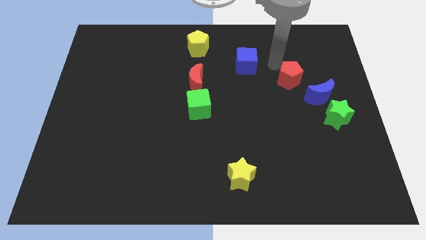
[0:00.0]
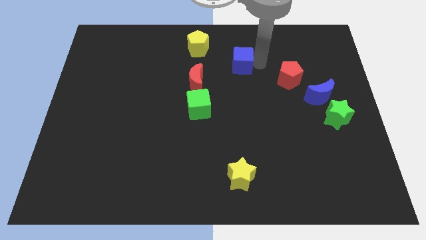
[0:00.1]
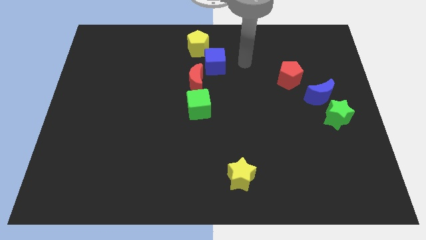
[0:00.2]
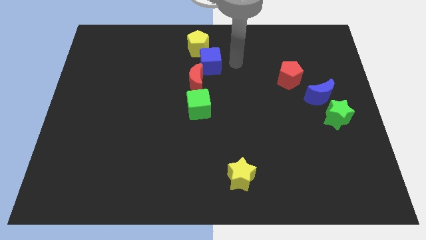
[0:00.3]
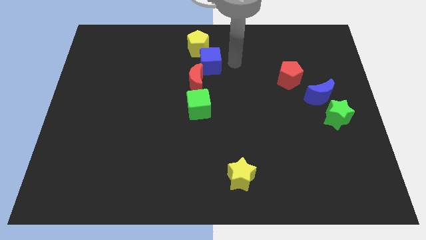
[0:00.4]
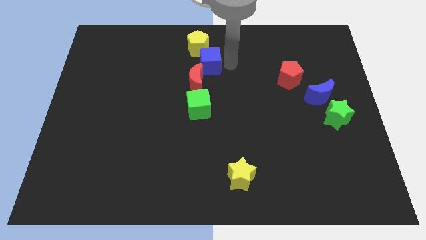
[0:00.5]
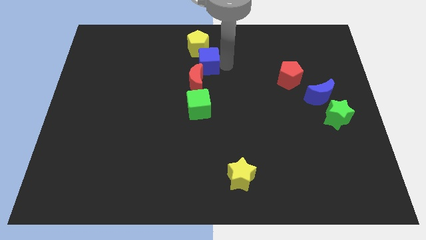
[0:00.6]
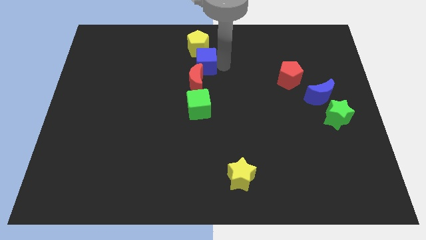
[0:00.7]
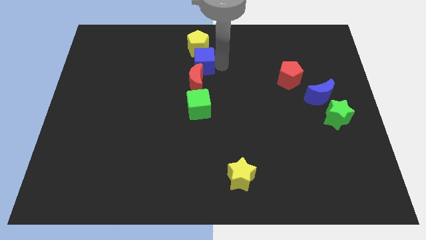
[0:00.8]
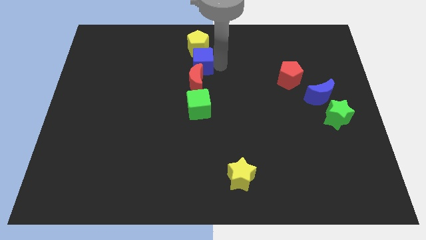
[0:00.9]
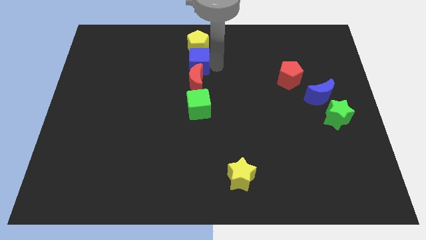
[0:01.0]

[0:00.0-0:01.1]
place the blue cube below the yellow pentagon

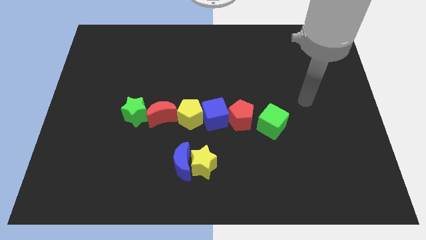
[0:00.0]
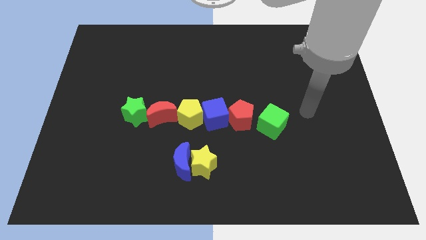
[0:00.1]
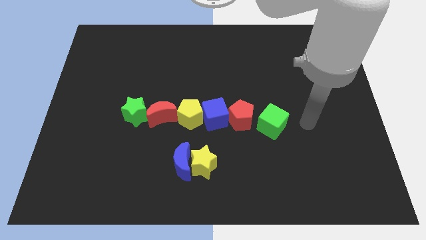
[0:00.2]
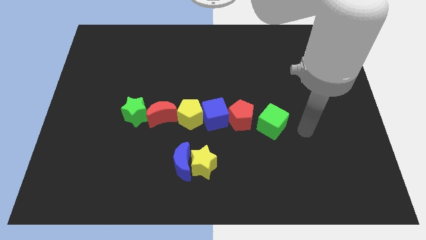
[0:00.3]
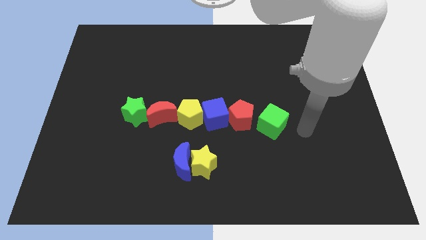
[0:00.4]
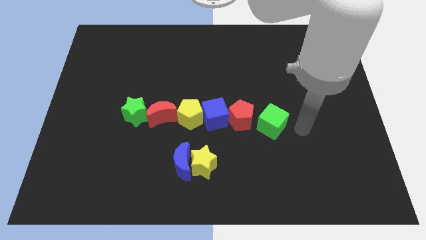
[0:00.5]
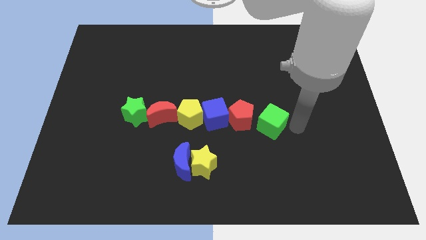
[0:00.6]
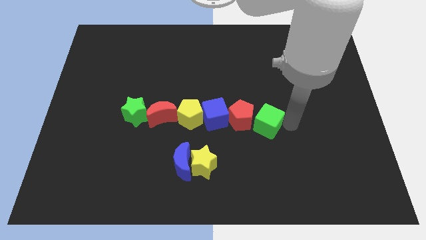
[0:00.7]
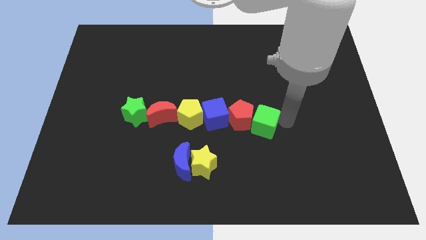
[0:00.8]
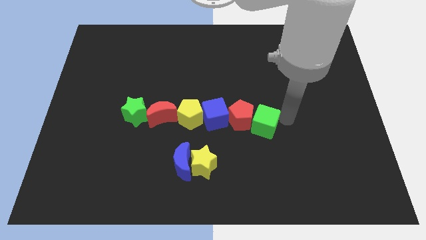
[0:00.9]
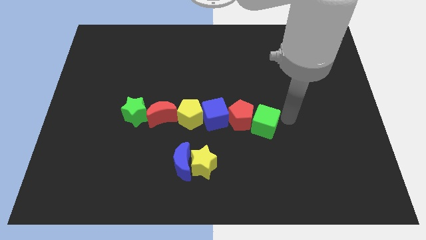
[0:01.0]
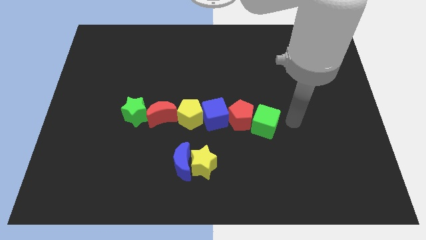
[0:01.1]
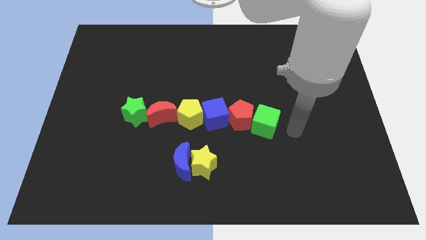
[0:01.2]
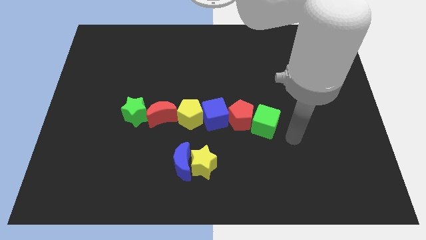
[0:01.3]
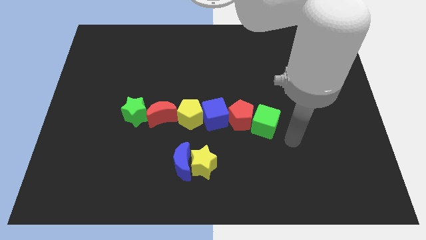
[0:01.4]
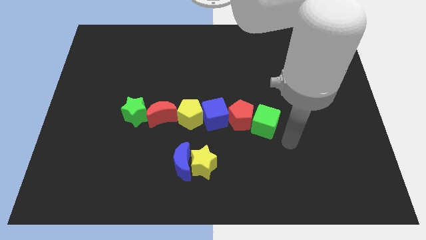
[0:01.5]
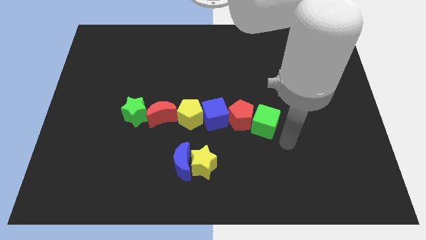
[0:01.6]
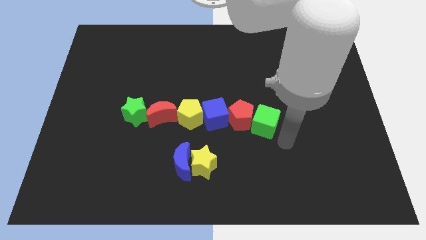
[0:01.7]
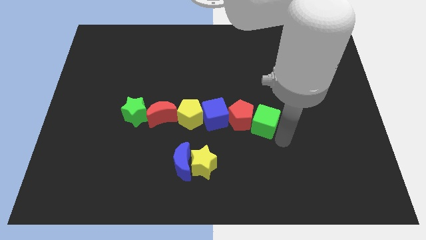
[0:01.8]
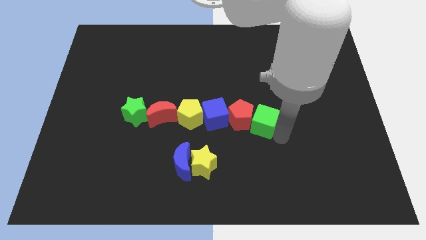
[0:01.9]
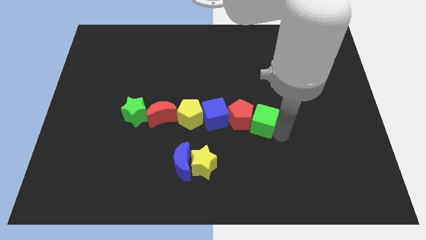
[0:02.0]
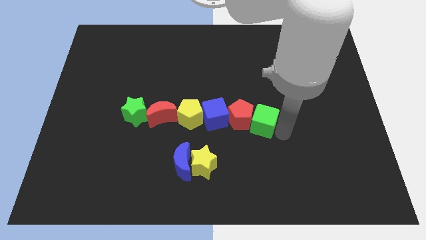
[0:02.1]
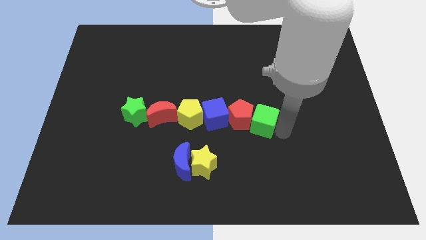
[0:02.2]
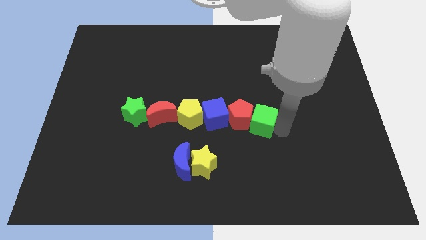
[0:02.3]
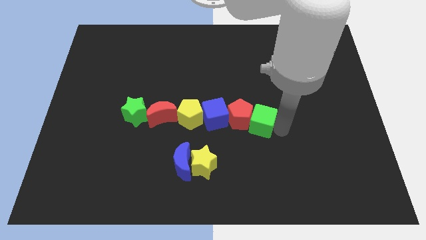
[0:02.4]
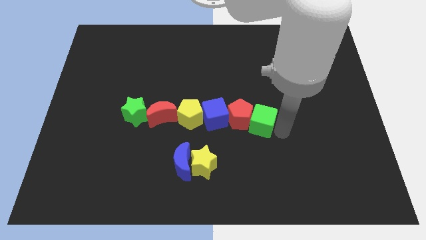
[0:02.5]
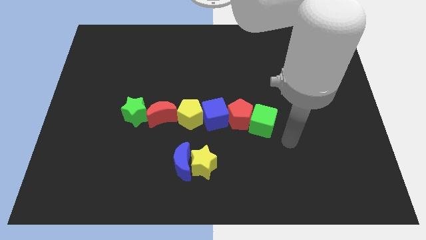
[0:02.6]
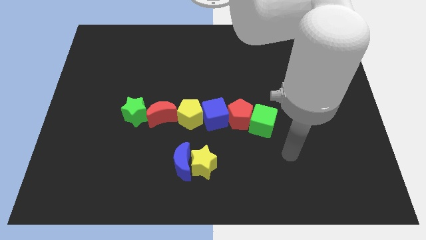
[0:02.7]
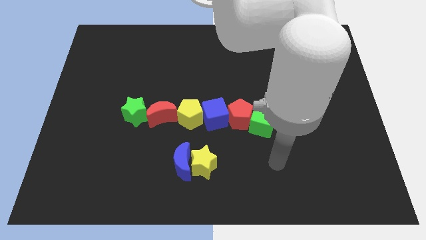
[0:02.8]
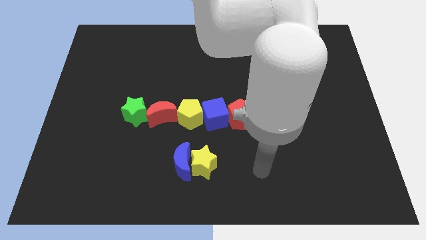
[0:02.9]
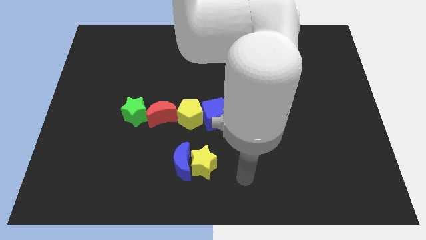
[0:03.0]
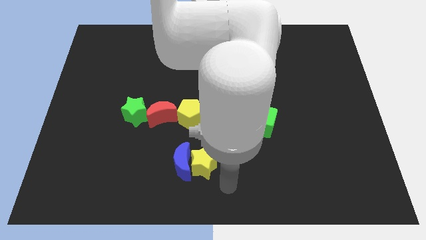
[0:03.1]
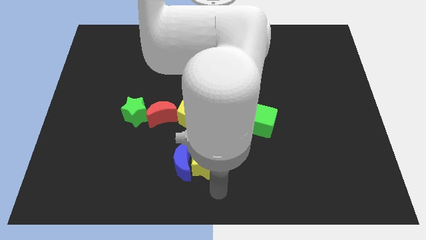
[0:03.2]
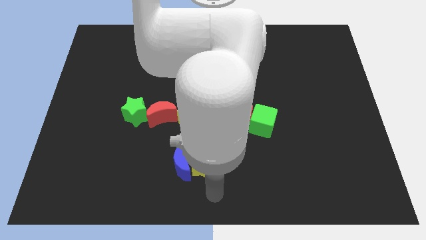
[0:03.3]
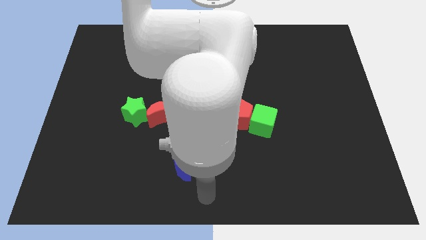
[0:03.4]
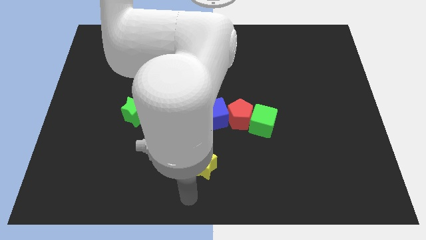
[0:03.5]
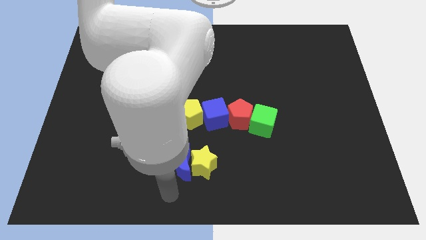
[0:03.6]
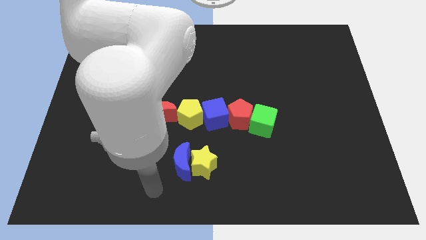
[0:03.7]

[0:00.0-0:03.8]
move your arm towards bottom of the board

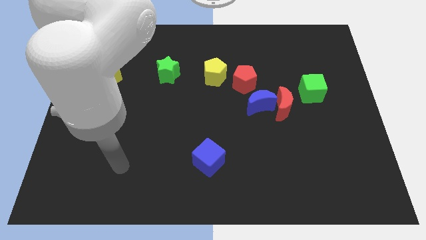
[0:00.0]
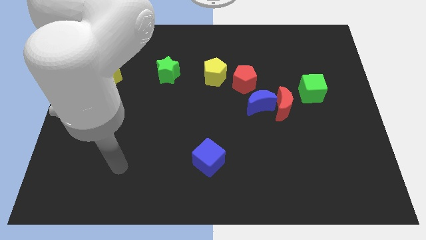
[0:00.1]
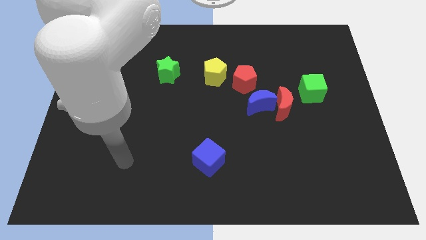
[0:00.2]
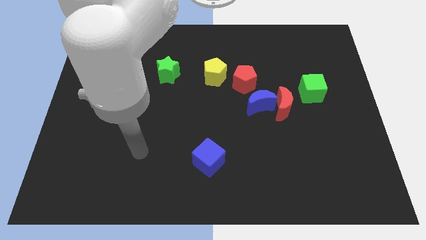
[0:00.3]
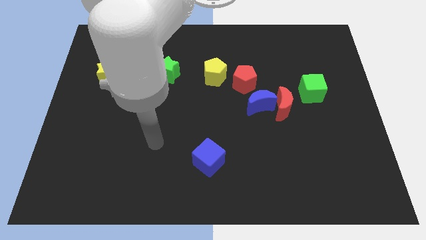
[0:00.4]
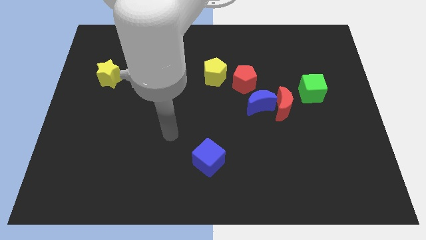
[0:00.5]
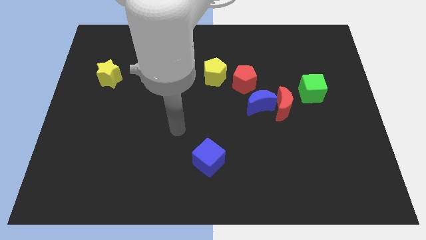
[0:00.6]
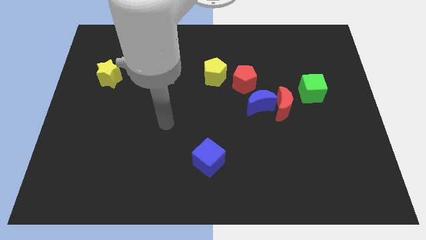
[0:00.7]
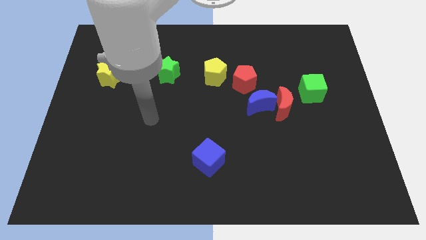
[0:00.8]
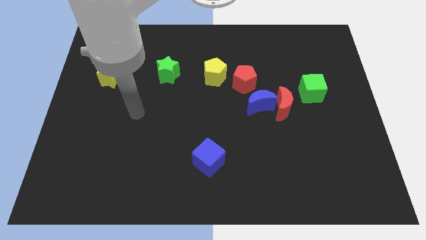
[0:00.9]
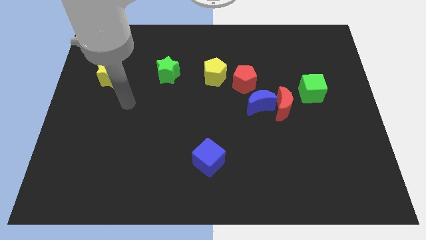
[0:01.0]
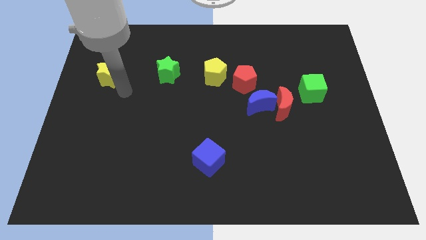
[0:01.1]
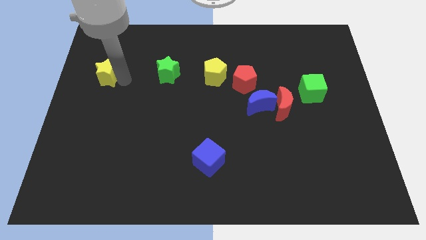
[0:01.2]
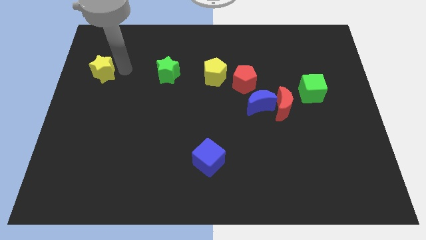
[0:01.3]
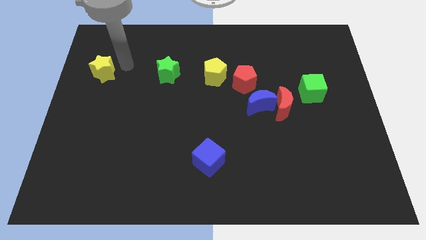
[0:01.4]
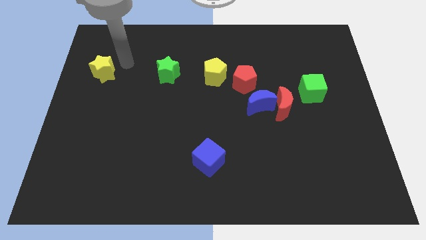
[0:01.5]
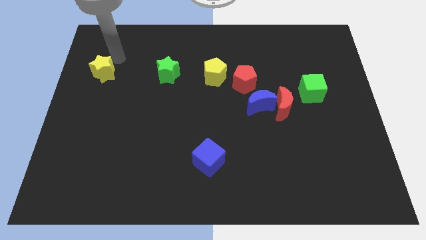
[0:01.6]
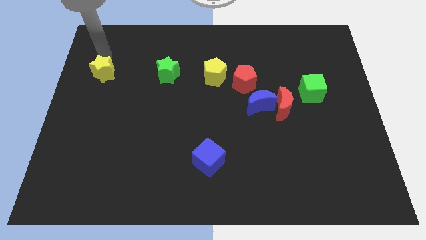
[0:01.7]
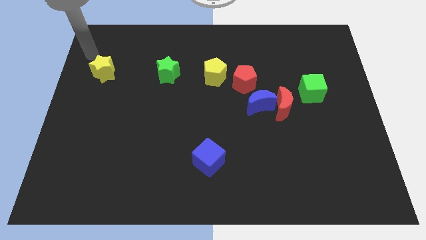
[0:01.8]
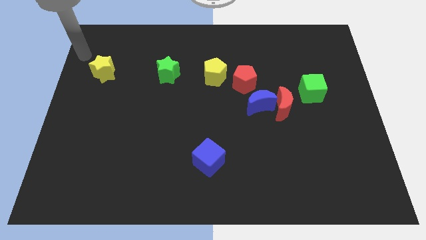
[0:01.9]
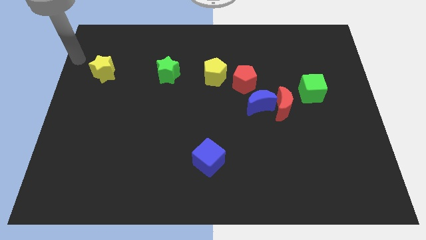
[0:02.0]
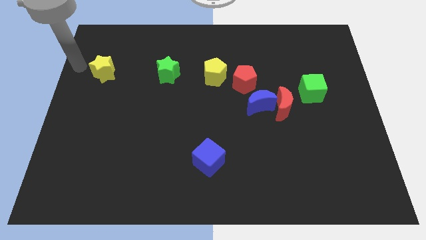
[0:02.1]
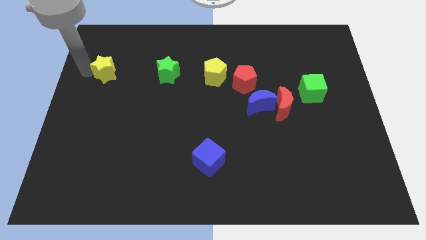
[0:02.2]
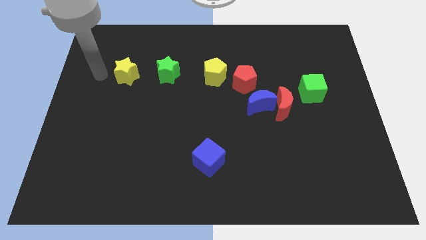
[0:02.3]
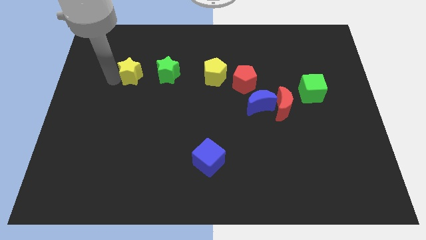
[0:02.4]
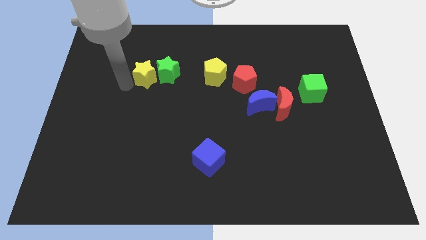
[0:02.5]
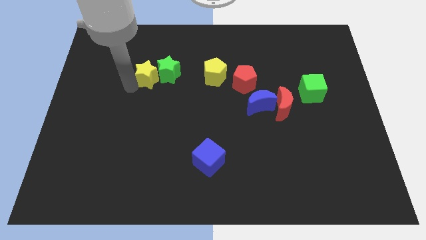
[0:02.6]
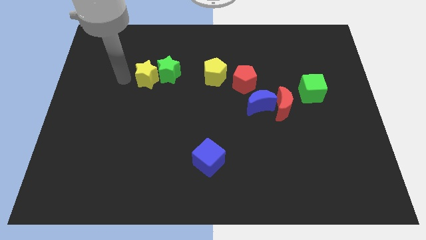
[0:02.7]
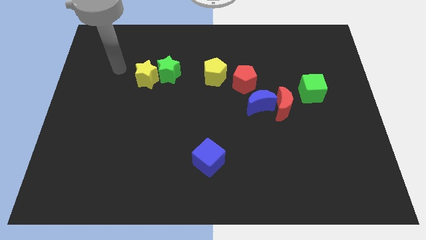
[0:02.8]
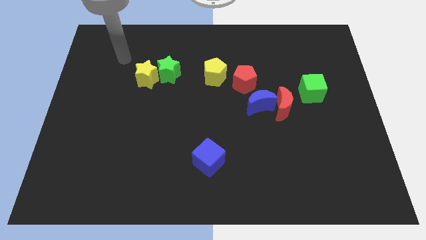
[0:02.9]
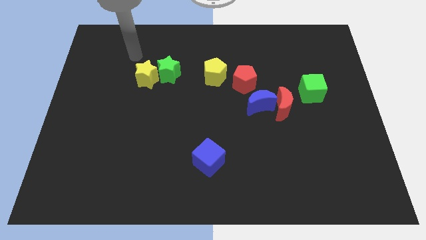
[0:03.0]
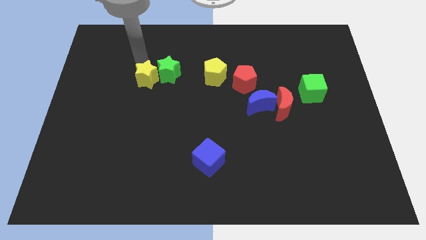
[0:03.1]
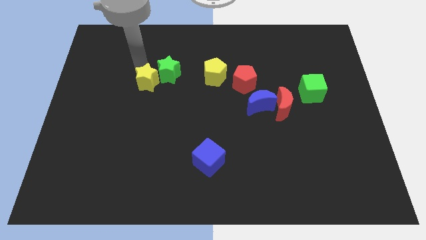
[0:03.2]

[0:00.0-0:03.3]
move the yellow star into left of the green star

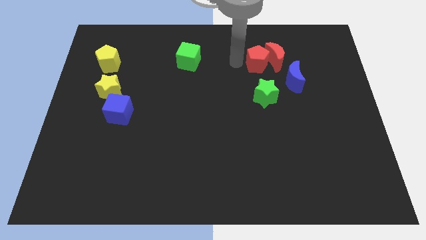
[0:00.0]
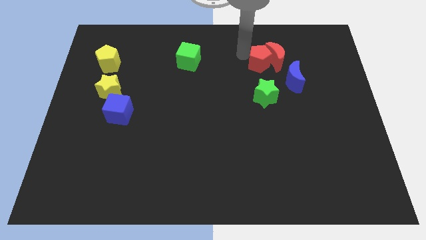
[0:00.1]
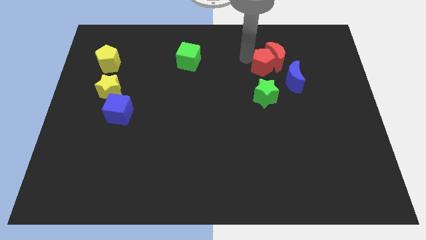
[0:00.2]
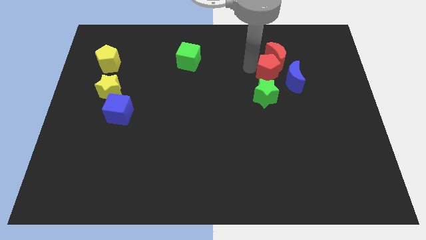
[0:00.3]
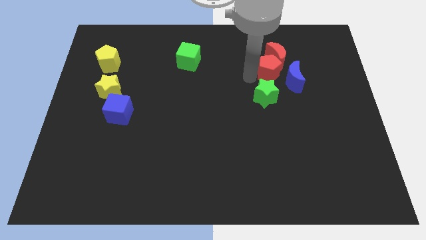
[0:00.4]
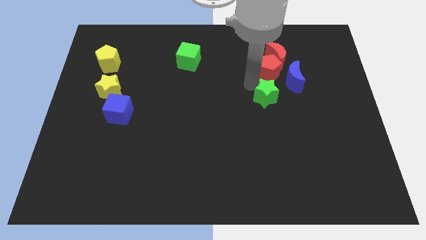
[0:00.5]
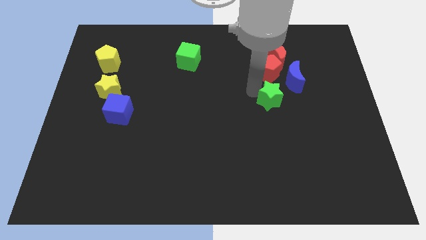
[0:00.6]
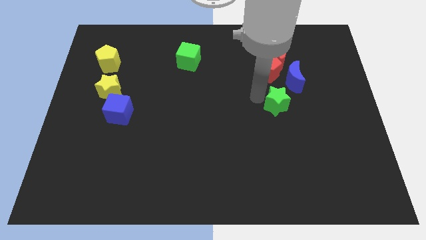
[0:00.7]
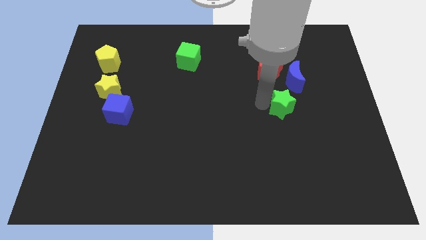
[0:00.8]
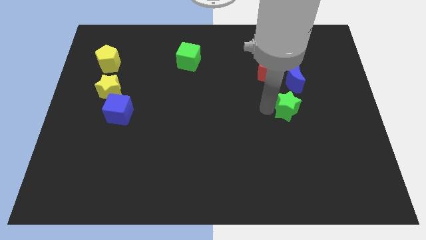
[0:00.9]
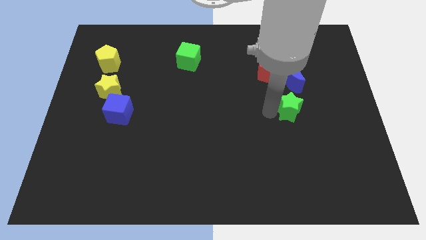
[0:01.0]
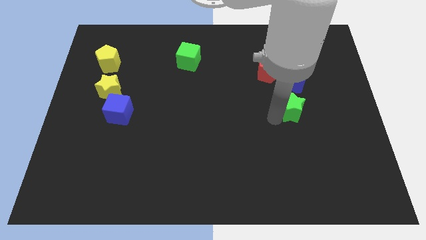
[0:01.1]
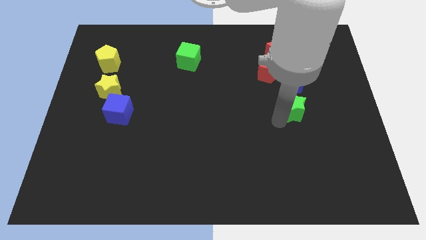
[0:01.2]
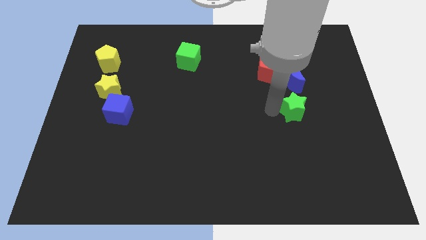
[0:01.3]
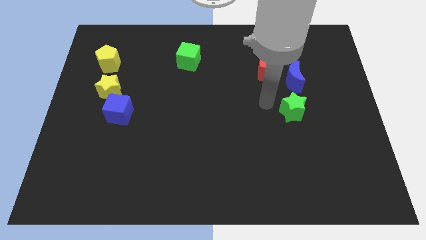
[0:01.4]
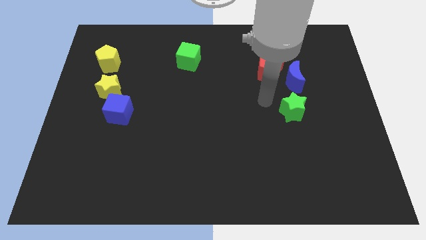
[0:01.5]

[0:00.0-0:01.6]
place green star to the bottom of blue moon
